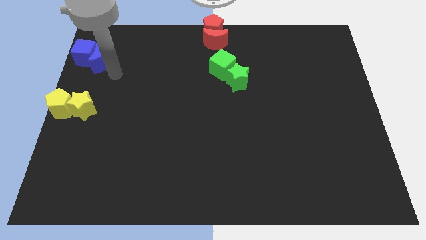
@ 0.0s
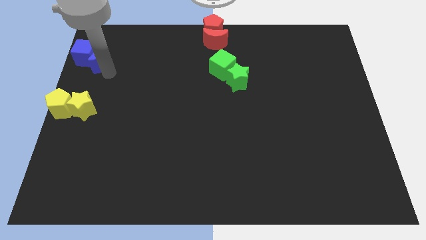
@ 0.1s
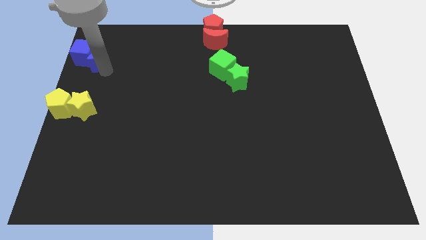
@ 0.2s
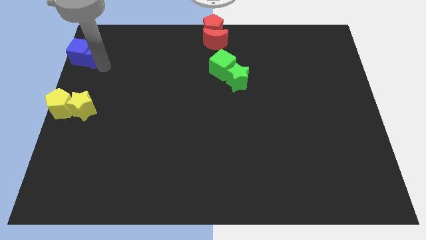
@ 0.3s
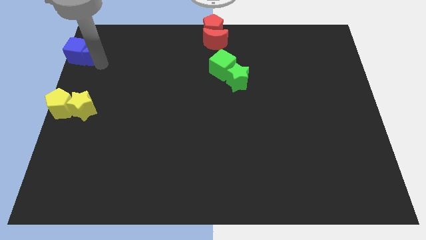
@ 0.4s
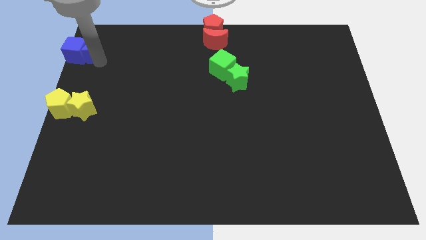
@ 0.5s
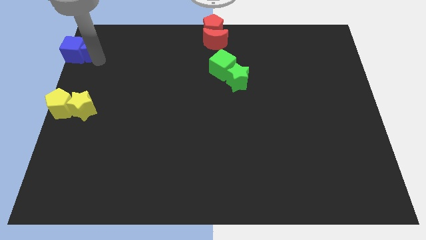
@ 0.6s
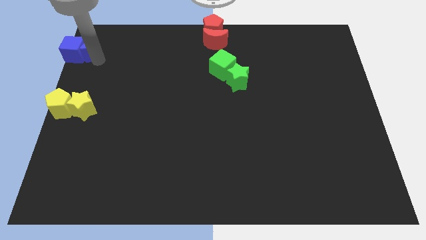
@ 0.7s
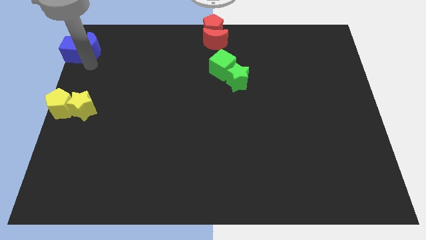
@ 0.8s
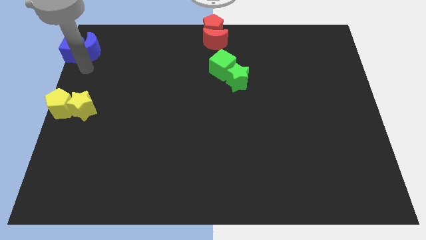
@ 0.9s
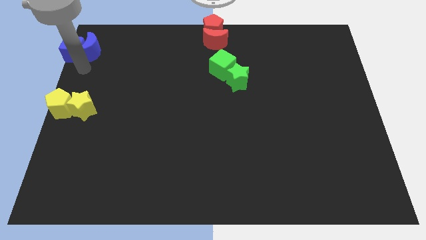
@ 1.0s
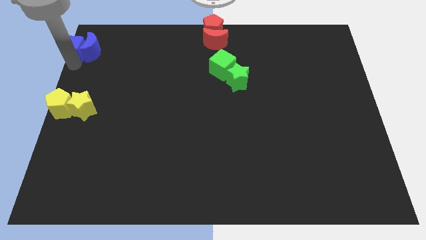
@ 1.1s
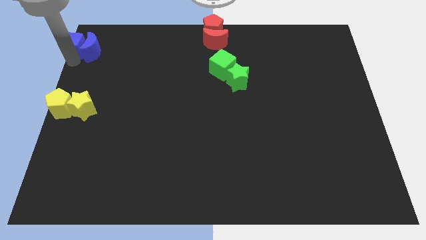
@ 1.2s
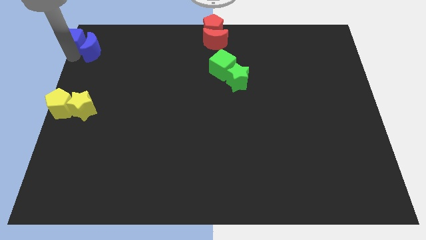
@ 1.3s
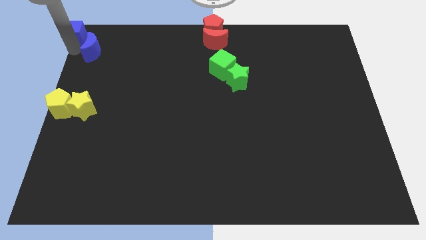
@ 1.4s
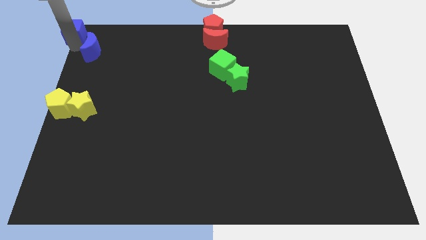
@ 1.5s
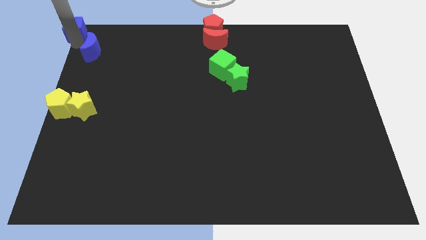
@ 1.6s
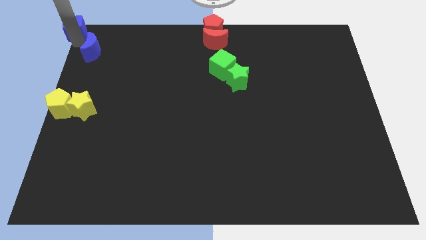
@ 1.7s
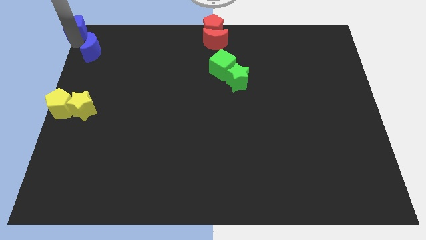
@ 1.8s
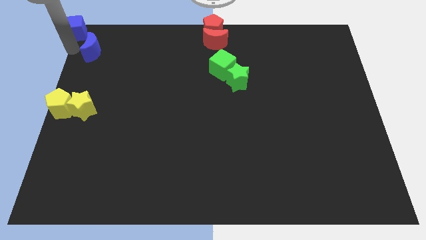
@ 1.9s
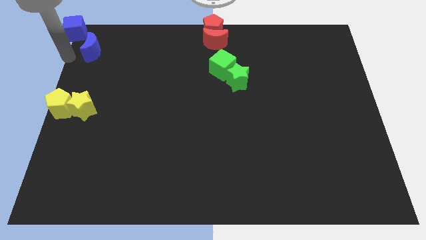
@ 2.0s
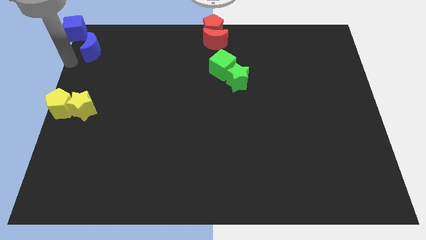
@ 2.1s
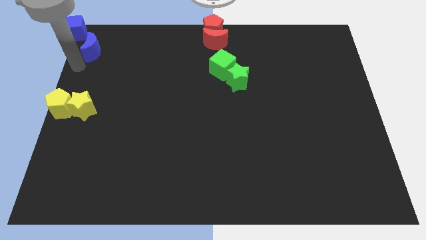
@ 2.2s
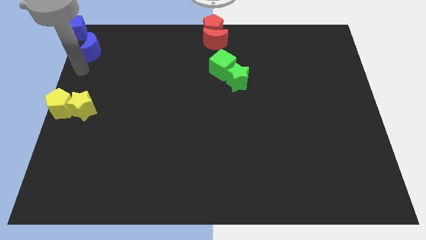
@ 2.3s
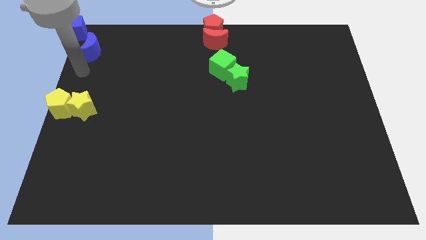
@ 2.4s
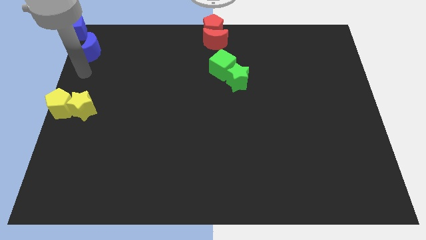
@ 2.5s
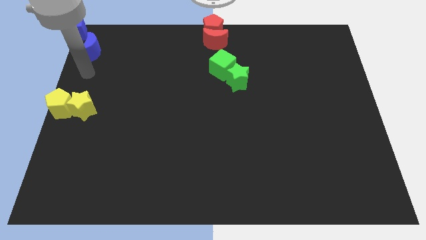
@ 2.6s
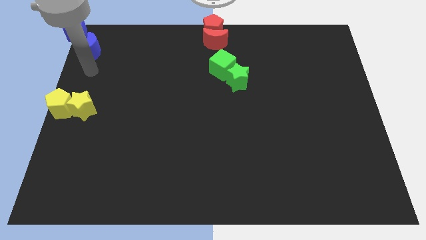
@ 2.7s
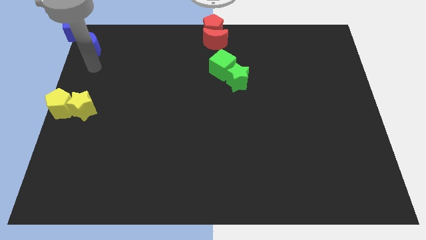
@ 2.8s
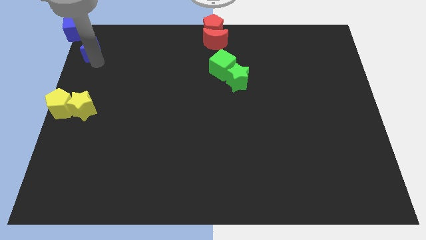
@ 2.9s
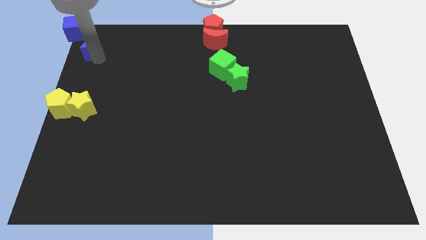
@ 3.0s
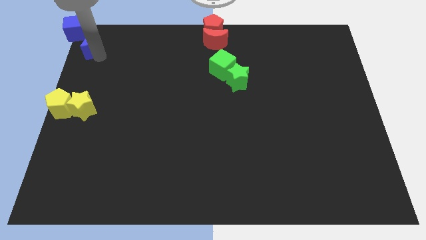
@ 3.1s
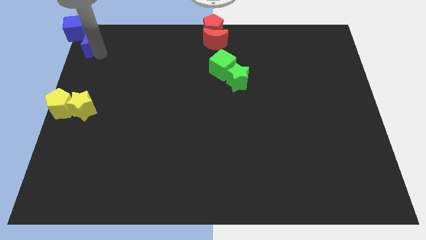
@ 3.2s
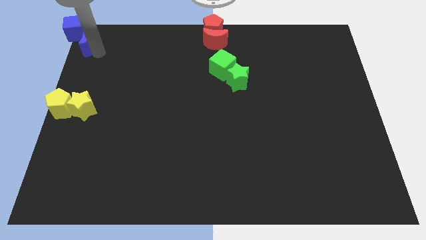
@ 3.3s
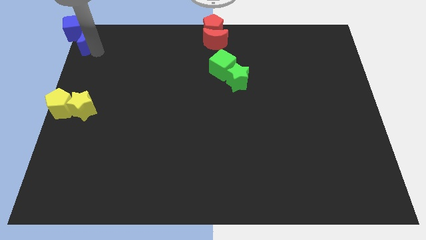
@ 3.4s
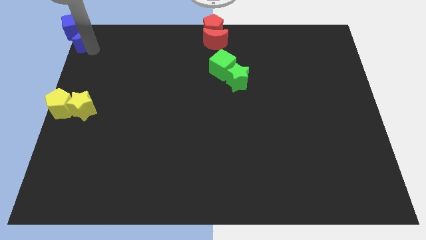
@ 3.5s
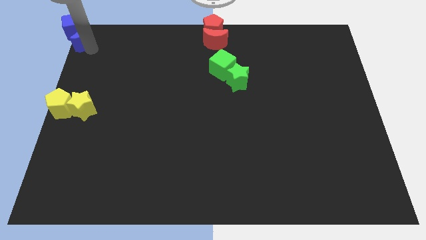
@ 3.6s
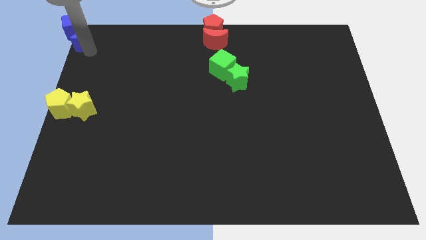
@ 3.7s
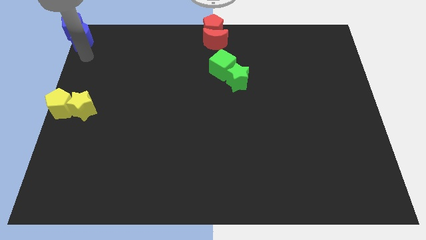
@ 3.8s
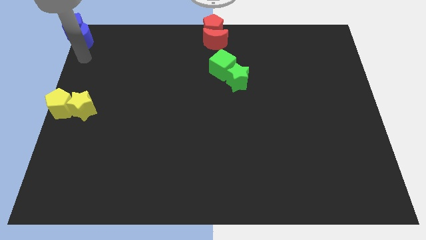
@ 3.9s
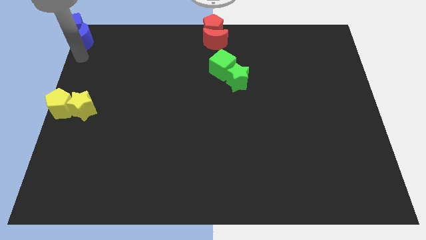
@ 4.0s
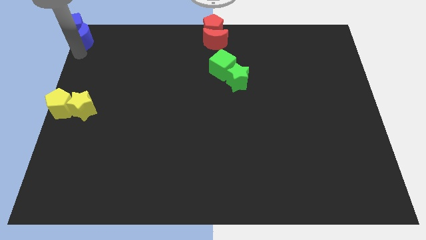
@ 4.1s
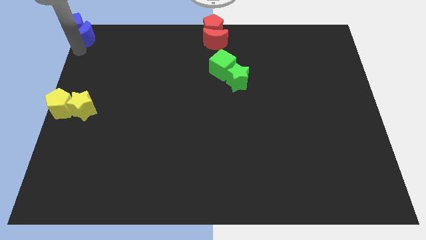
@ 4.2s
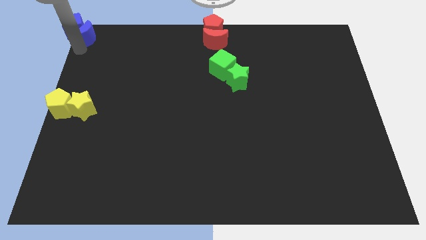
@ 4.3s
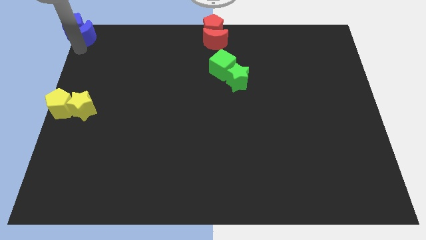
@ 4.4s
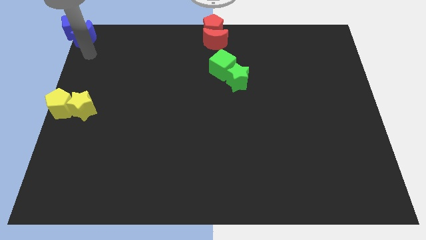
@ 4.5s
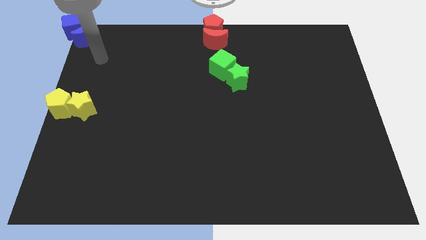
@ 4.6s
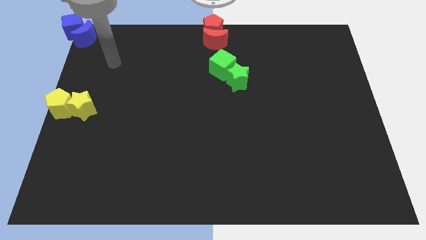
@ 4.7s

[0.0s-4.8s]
move the blue crescent along with blue cube to the top left corner of the board

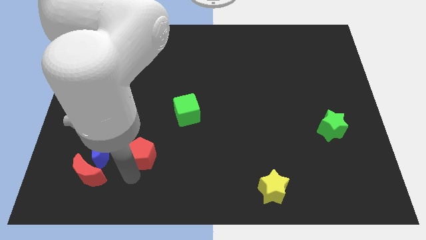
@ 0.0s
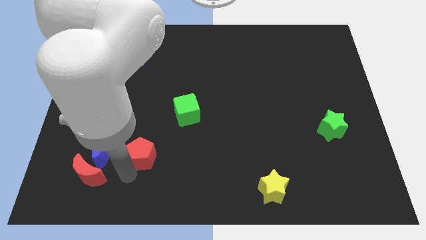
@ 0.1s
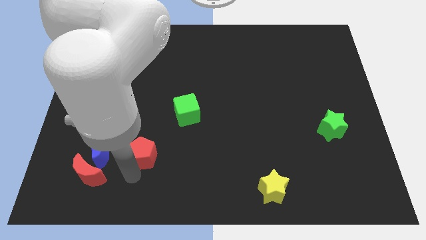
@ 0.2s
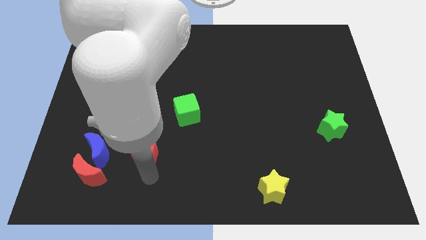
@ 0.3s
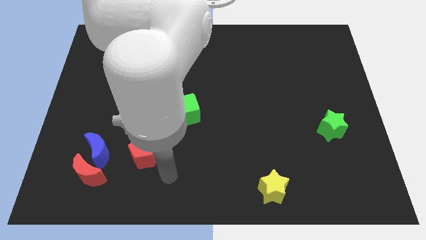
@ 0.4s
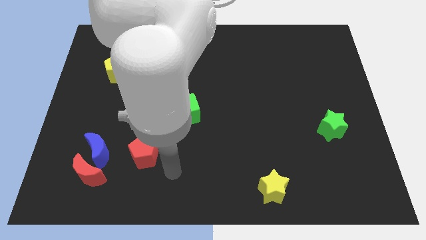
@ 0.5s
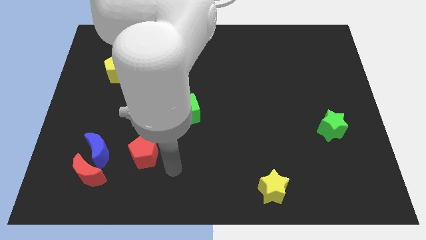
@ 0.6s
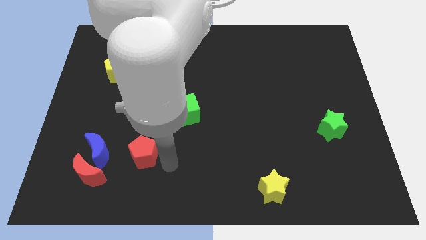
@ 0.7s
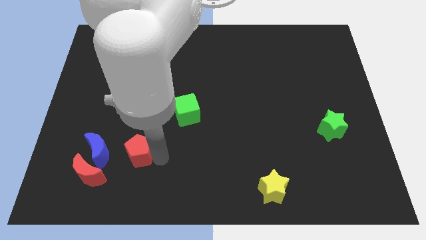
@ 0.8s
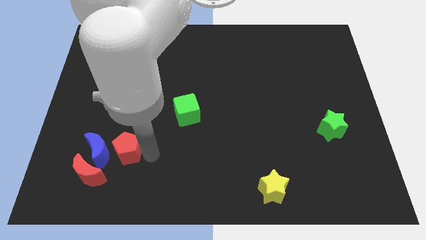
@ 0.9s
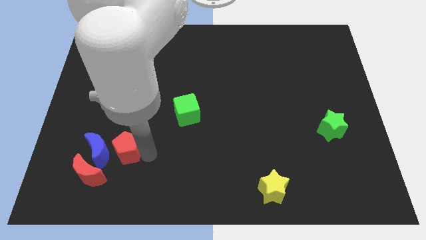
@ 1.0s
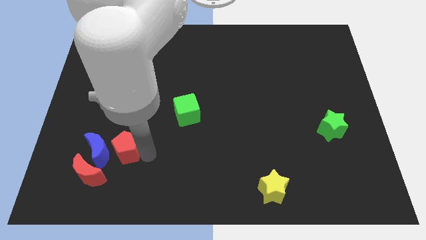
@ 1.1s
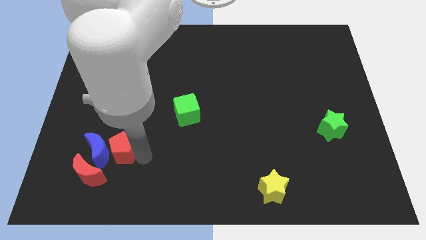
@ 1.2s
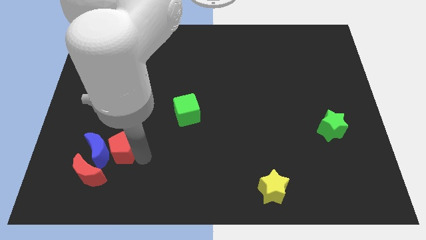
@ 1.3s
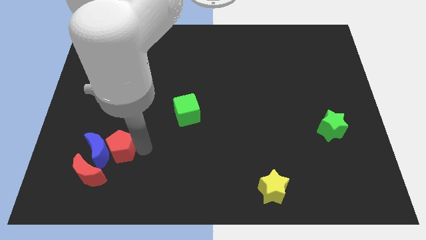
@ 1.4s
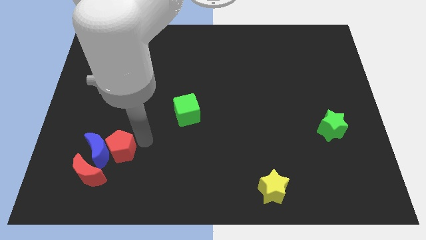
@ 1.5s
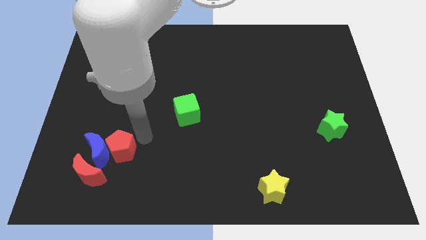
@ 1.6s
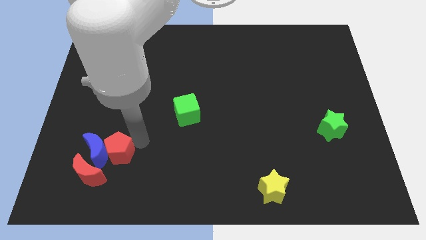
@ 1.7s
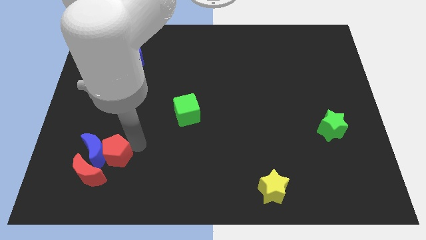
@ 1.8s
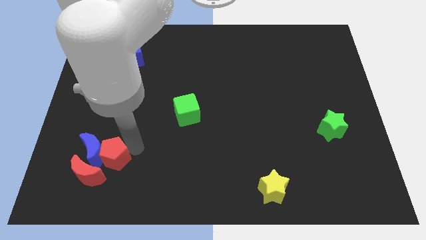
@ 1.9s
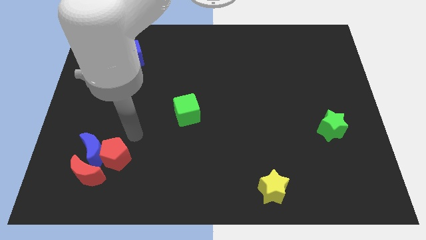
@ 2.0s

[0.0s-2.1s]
move the red pentagon into the blue moon

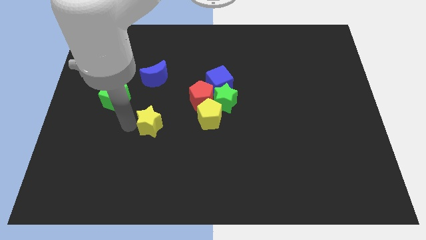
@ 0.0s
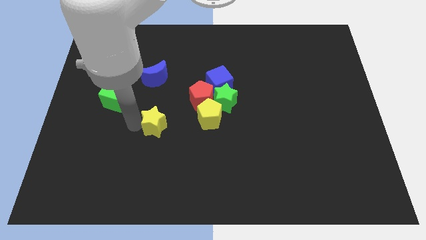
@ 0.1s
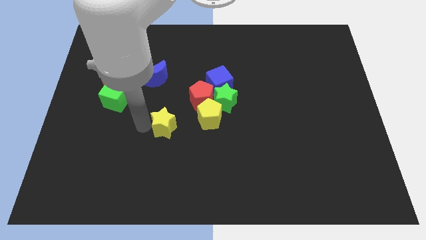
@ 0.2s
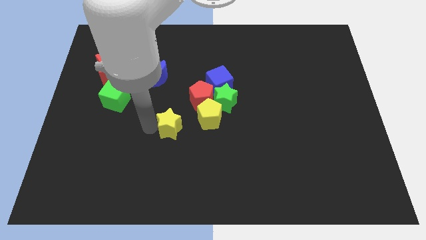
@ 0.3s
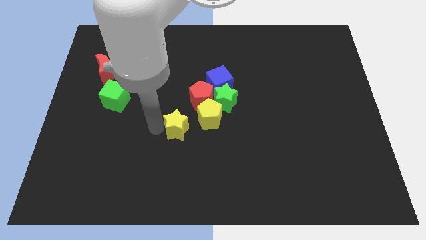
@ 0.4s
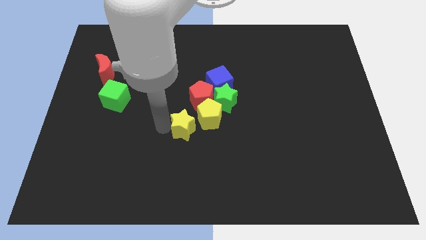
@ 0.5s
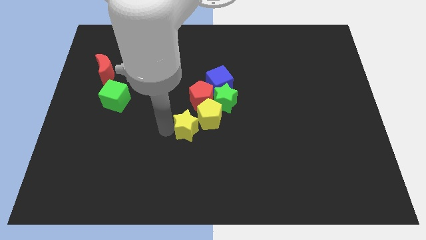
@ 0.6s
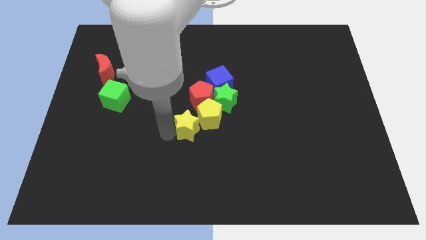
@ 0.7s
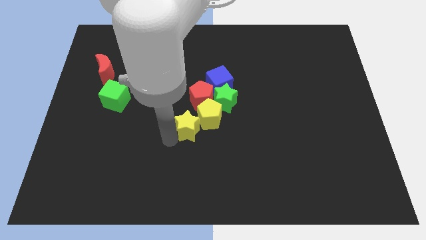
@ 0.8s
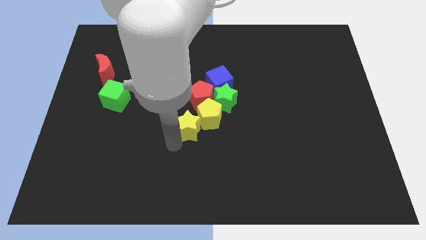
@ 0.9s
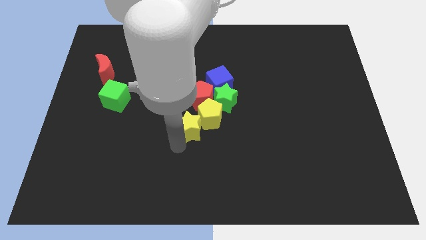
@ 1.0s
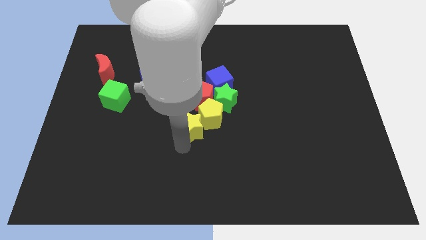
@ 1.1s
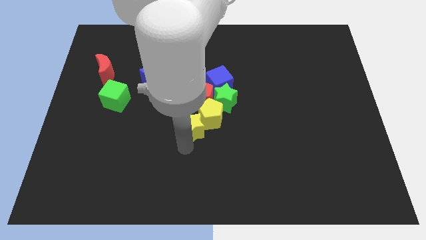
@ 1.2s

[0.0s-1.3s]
move the yellow star into the bottom left of the yellow pentagon

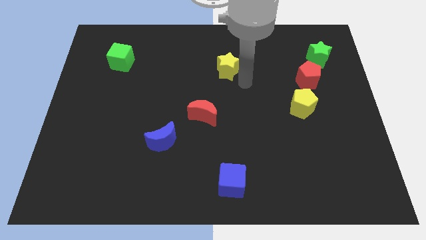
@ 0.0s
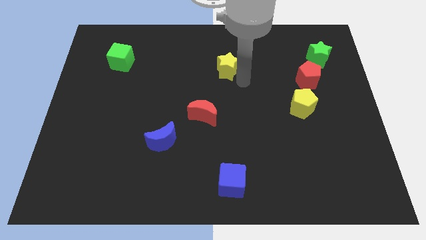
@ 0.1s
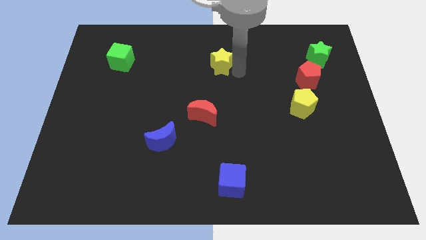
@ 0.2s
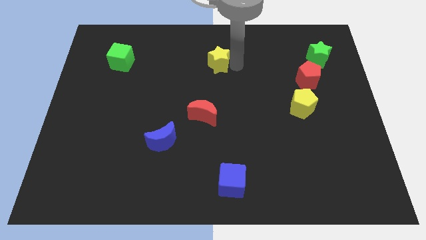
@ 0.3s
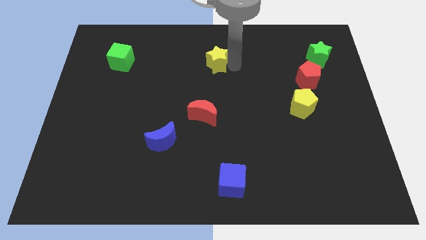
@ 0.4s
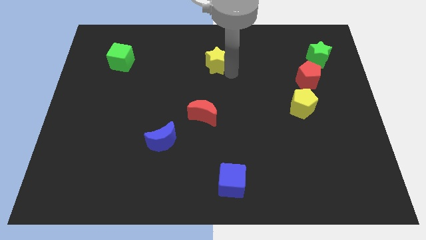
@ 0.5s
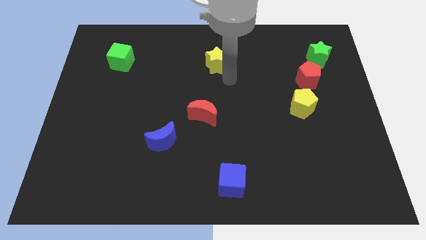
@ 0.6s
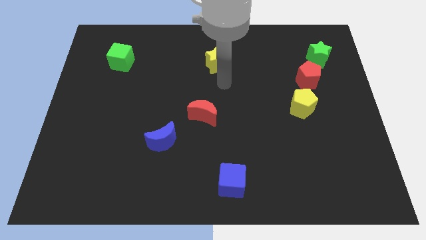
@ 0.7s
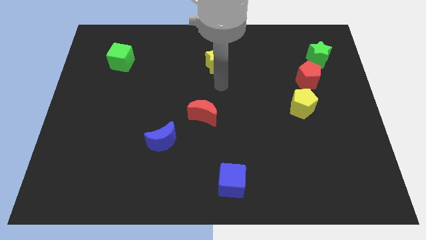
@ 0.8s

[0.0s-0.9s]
place the yellow star above the red moon

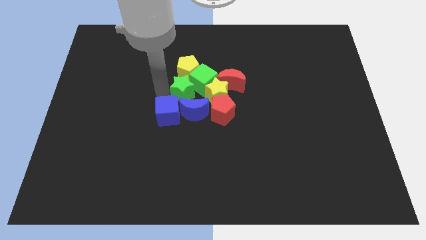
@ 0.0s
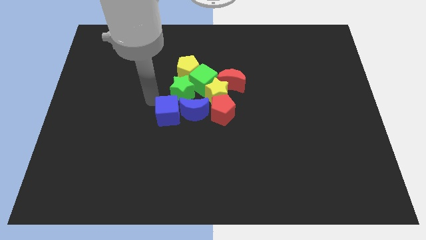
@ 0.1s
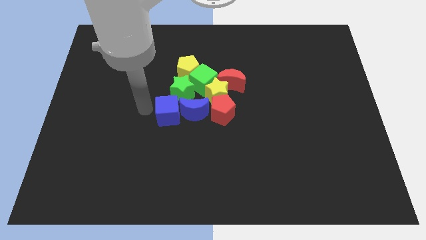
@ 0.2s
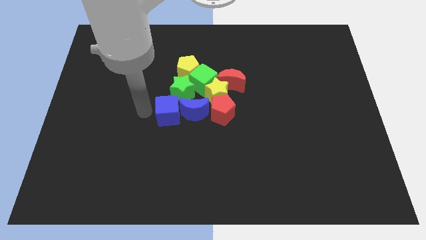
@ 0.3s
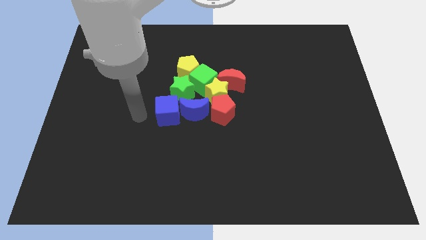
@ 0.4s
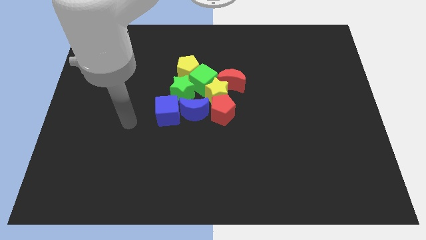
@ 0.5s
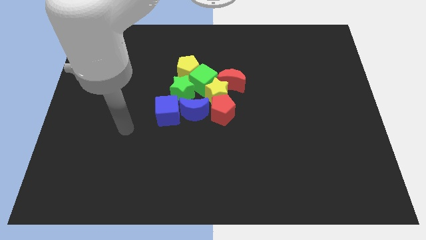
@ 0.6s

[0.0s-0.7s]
move your hand away from the green star
